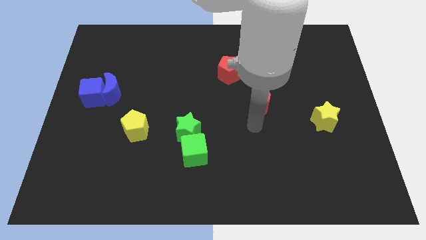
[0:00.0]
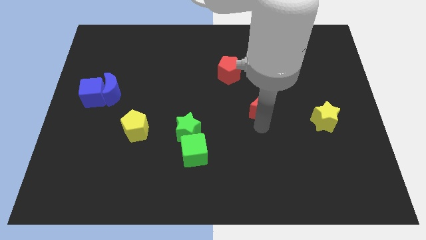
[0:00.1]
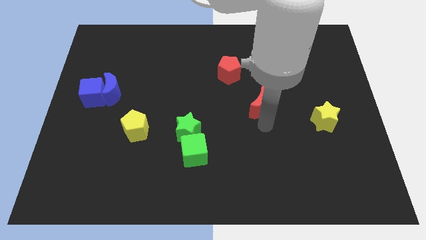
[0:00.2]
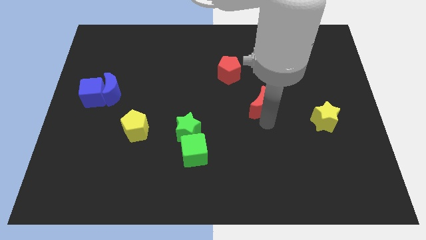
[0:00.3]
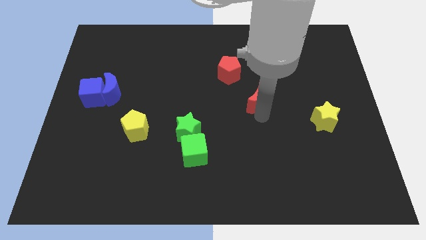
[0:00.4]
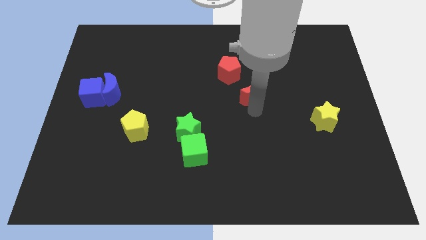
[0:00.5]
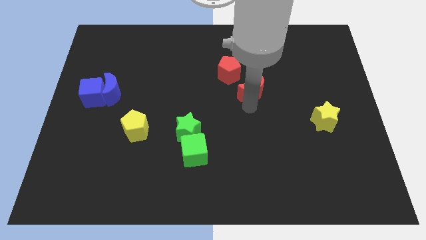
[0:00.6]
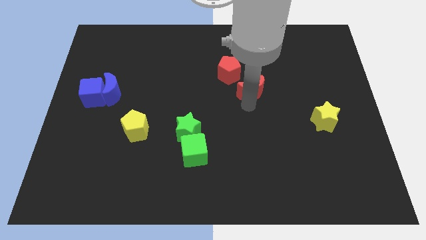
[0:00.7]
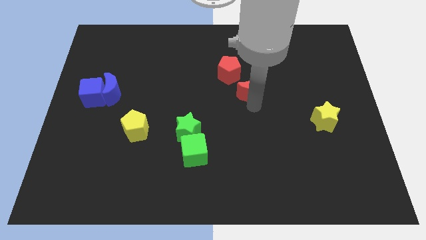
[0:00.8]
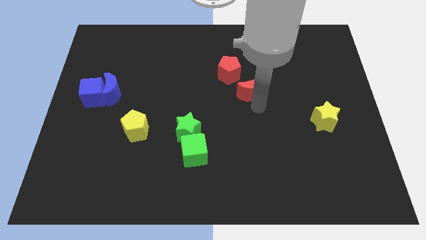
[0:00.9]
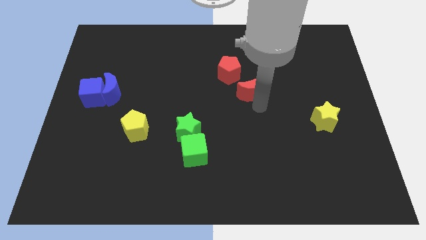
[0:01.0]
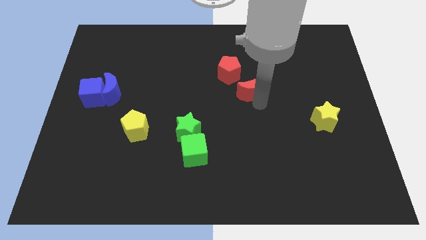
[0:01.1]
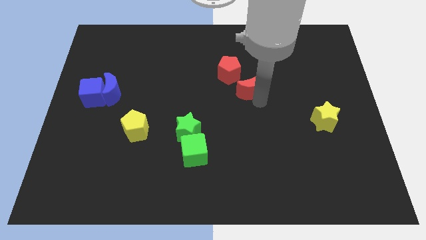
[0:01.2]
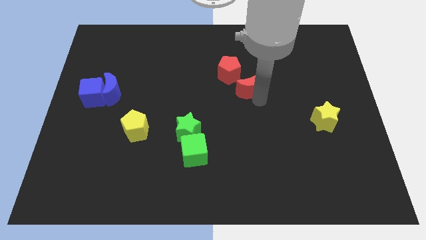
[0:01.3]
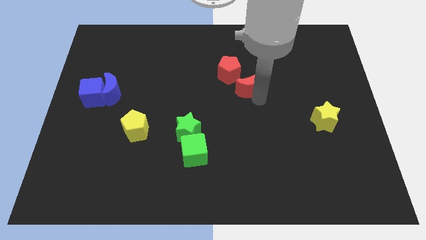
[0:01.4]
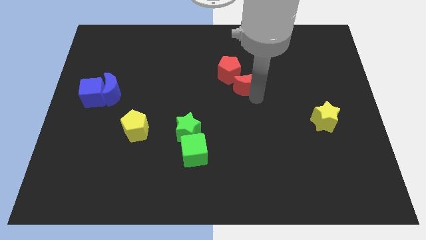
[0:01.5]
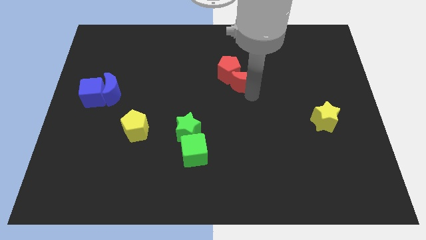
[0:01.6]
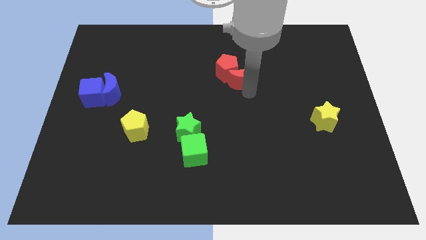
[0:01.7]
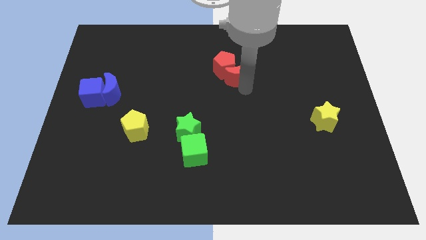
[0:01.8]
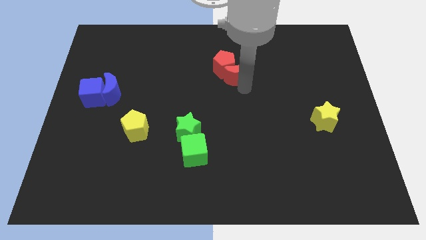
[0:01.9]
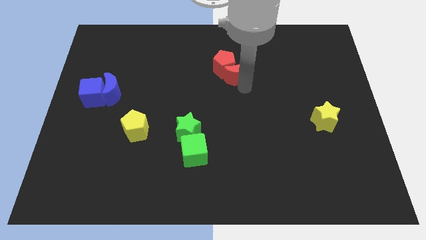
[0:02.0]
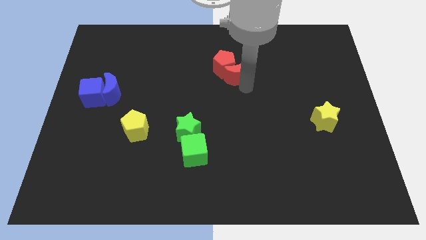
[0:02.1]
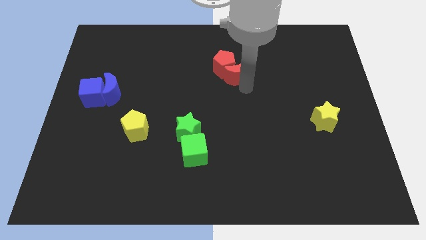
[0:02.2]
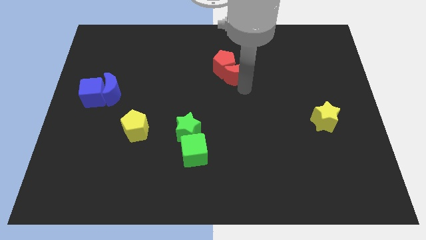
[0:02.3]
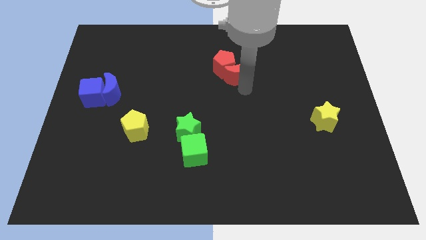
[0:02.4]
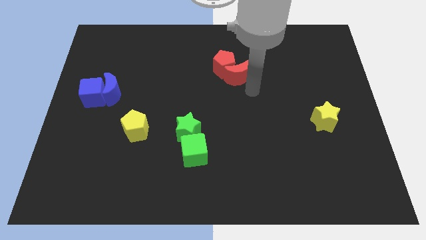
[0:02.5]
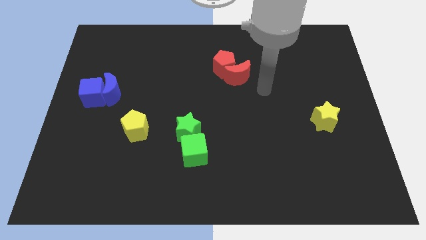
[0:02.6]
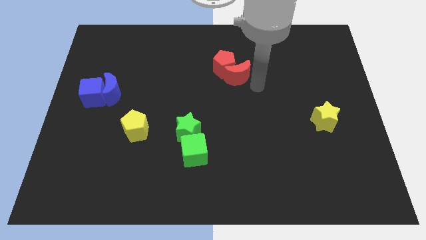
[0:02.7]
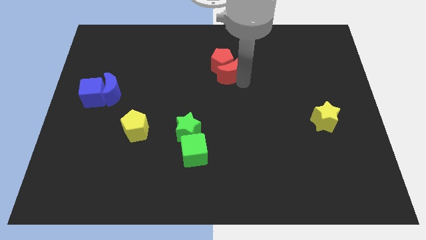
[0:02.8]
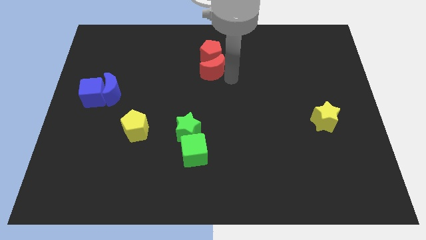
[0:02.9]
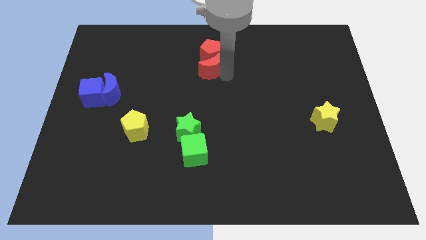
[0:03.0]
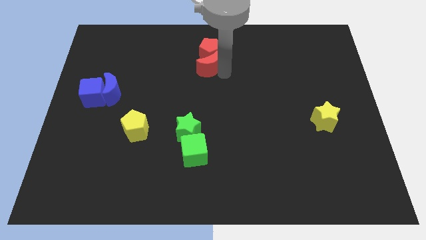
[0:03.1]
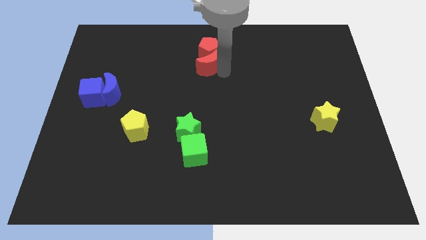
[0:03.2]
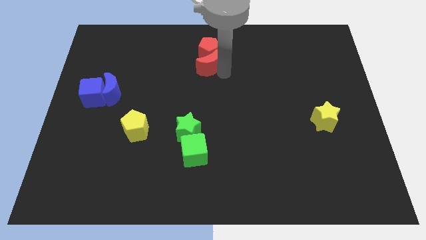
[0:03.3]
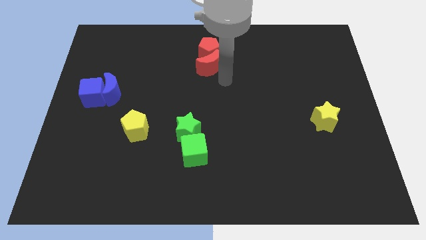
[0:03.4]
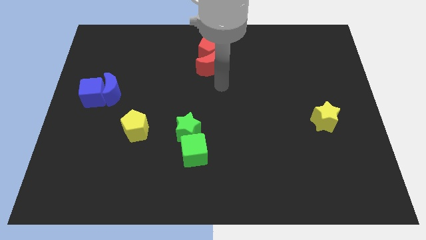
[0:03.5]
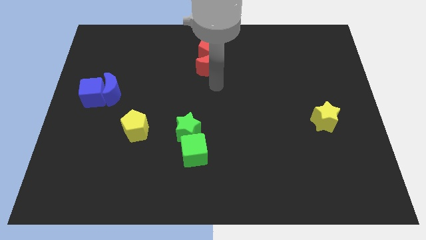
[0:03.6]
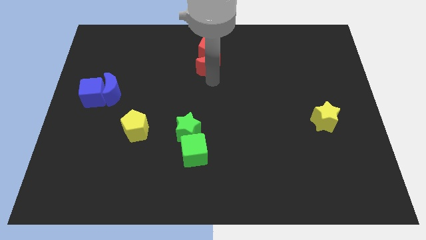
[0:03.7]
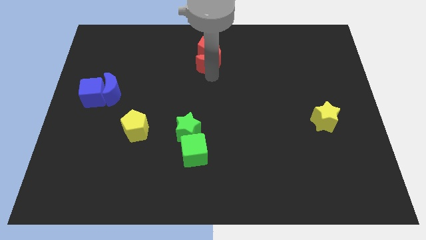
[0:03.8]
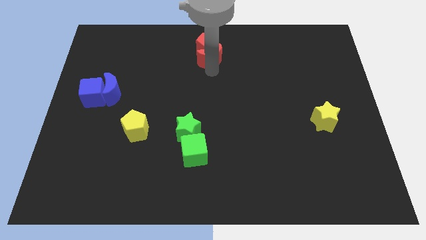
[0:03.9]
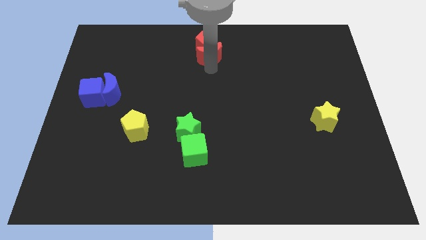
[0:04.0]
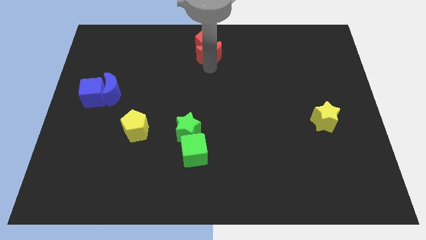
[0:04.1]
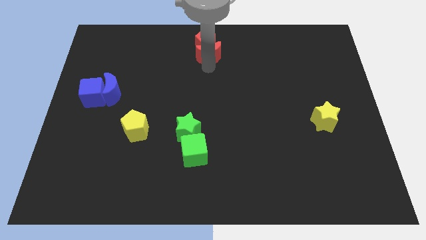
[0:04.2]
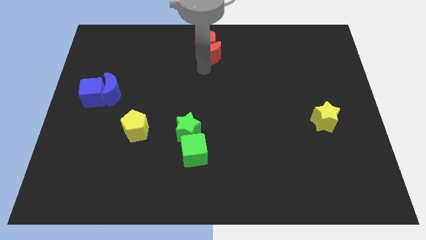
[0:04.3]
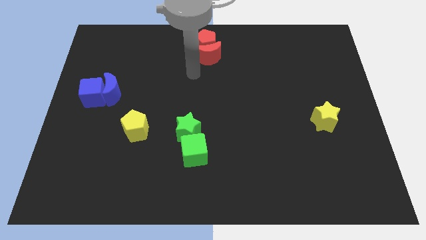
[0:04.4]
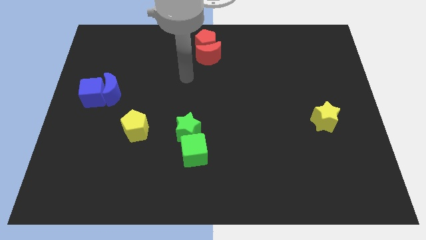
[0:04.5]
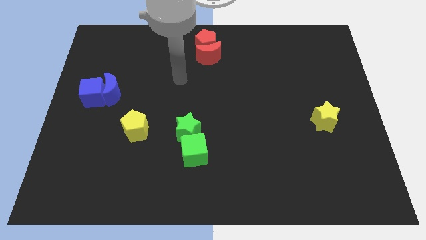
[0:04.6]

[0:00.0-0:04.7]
push the red moon into the red pentagon to the top center

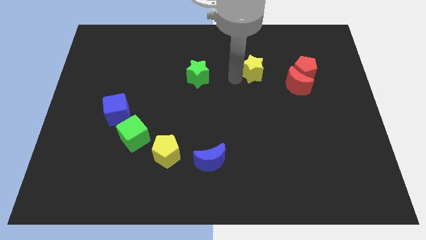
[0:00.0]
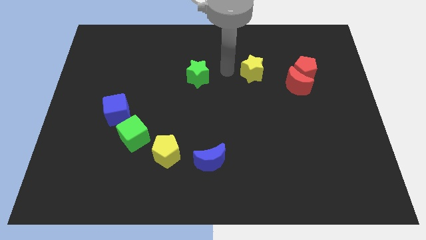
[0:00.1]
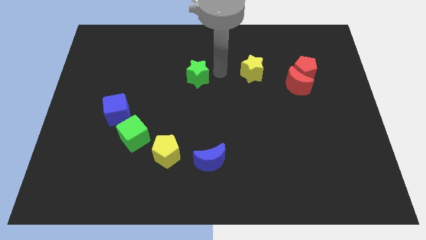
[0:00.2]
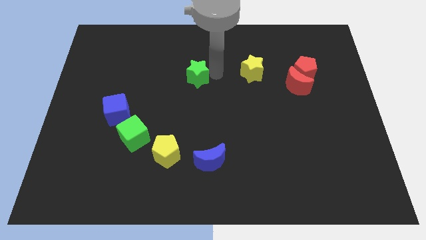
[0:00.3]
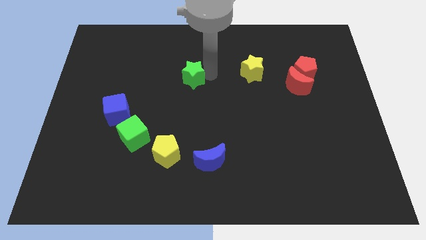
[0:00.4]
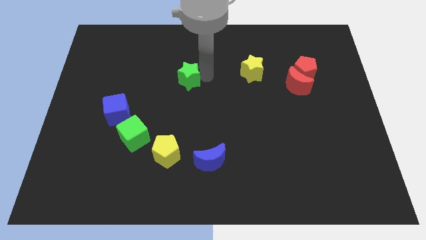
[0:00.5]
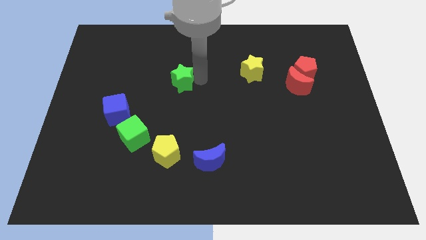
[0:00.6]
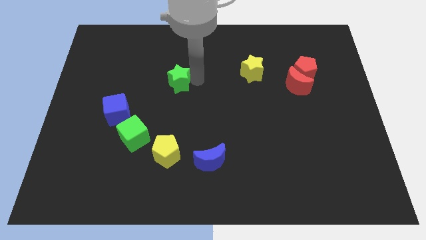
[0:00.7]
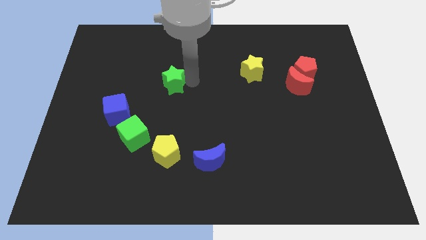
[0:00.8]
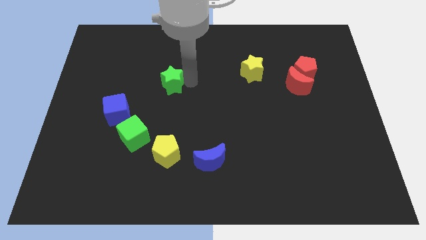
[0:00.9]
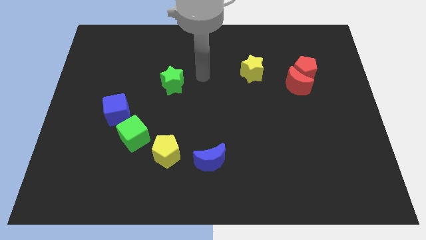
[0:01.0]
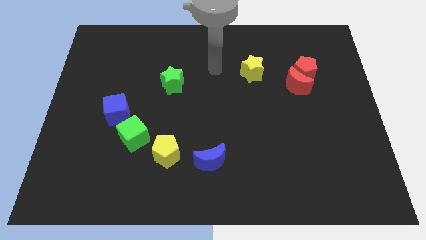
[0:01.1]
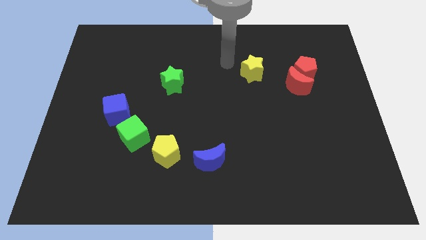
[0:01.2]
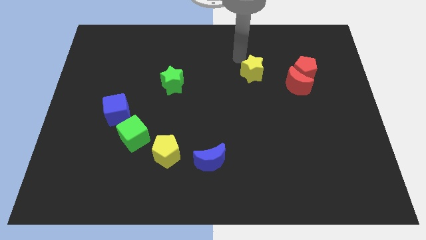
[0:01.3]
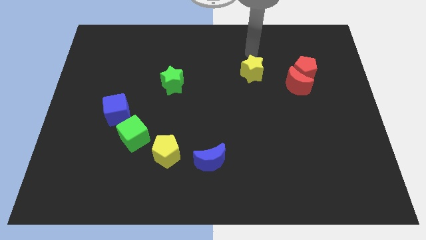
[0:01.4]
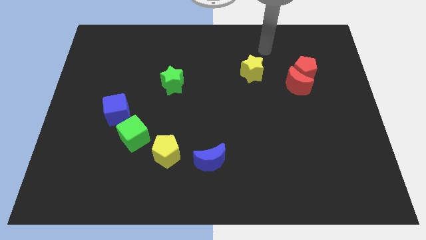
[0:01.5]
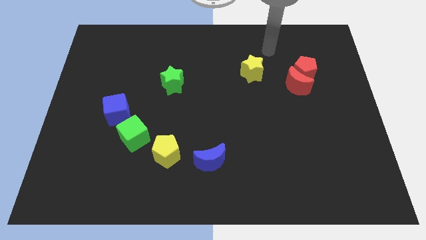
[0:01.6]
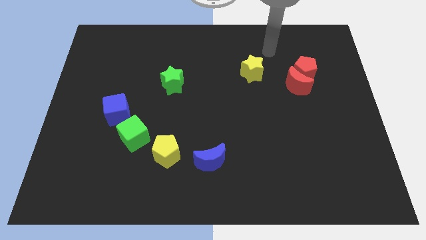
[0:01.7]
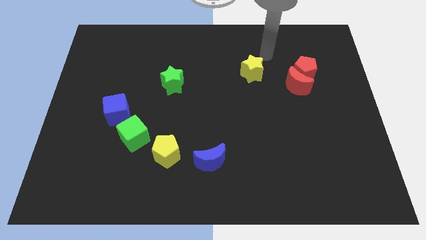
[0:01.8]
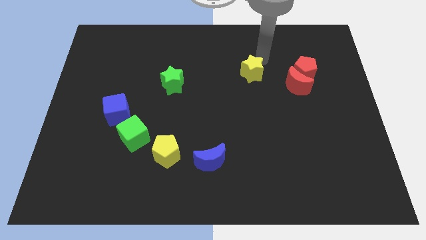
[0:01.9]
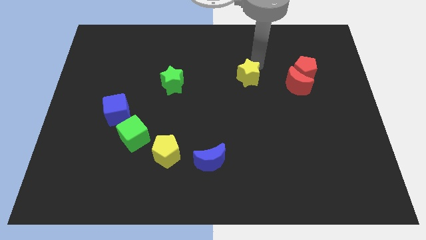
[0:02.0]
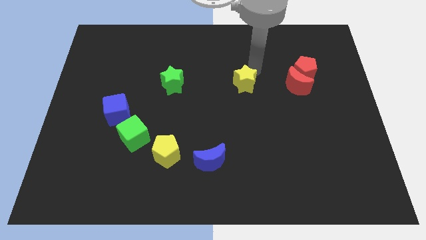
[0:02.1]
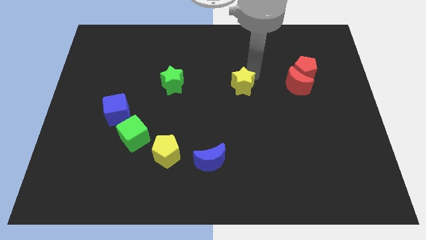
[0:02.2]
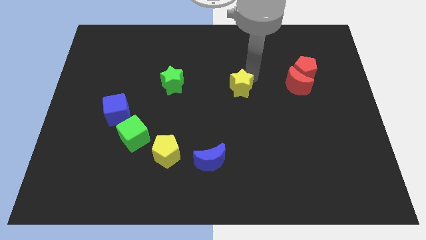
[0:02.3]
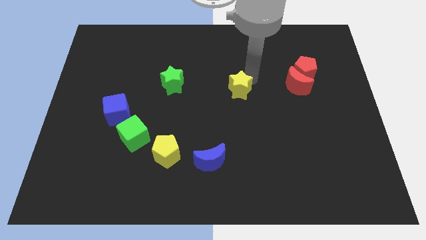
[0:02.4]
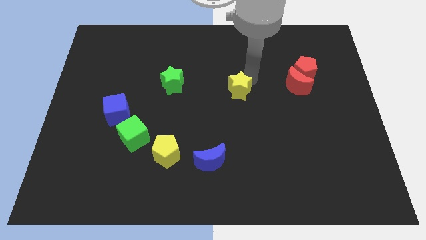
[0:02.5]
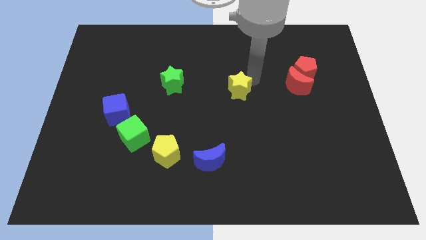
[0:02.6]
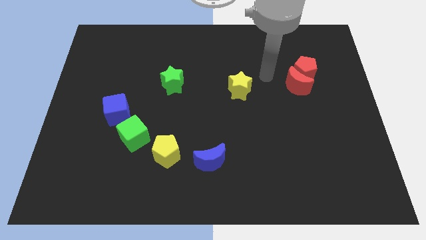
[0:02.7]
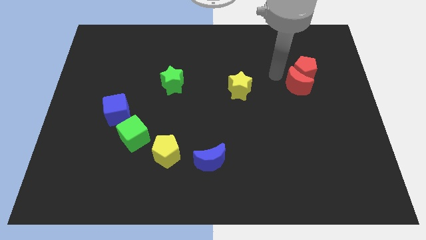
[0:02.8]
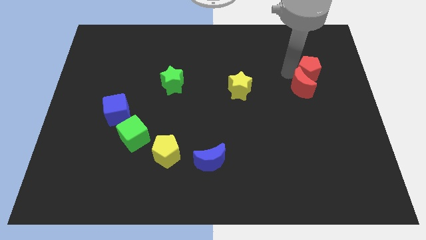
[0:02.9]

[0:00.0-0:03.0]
push both the stars slightly to the bottom side of the board

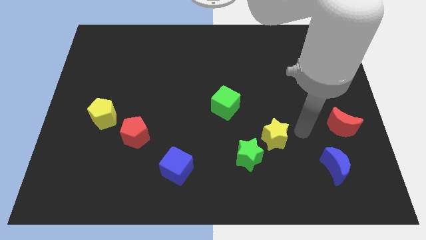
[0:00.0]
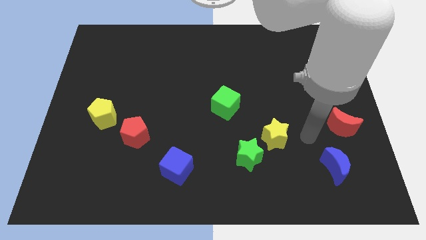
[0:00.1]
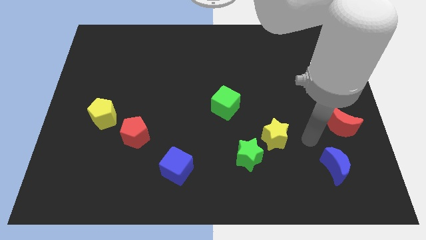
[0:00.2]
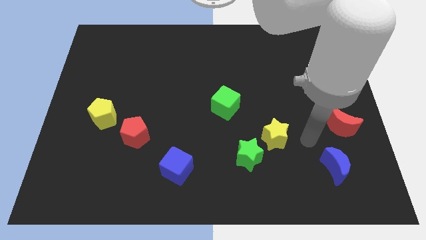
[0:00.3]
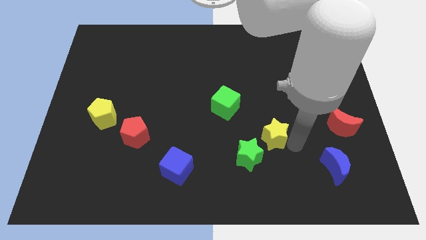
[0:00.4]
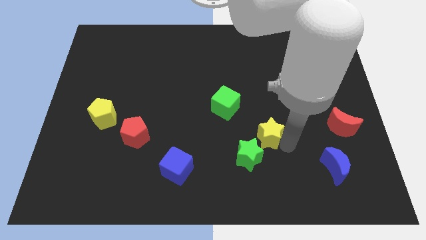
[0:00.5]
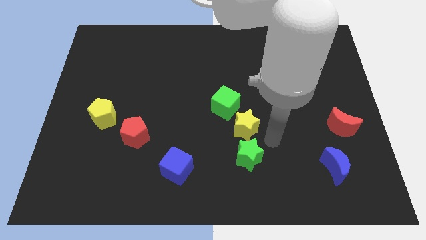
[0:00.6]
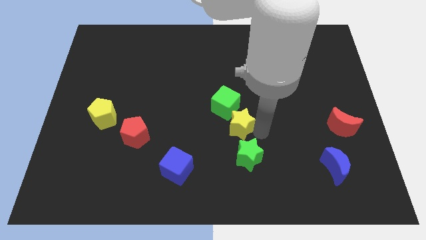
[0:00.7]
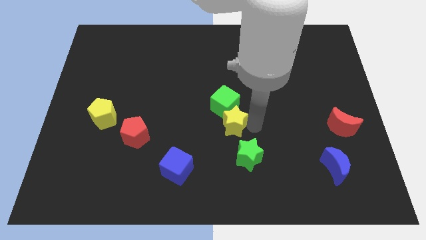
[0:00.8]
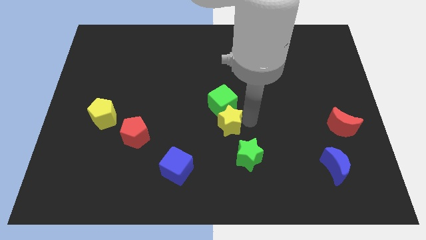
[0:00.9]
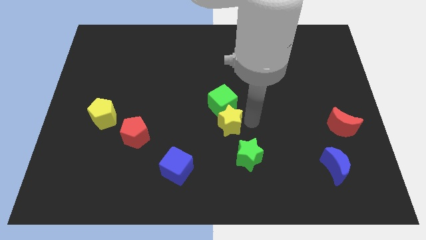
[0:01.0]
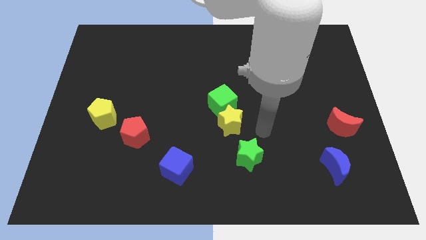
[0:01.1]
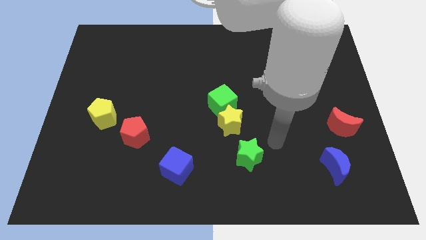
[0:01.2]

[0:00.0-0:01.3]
push the yellow star into the green cube
